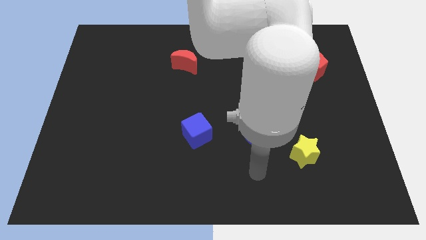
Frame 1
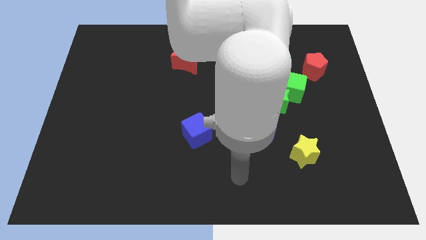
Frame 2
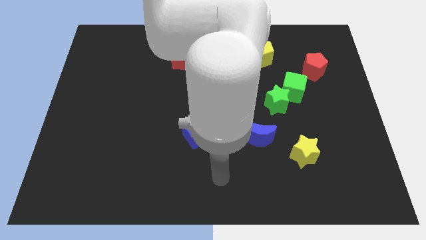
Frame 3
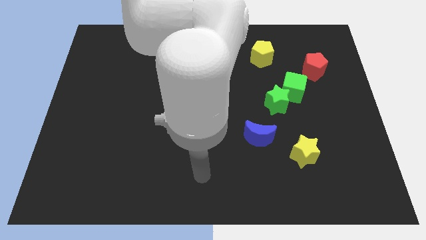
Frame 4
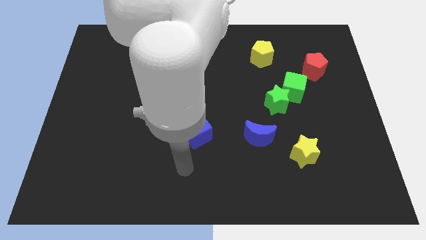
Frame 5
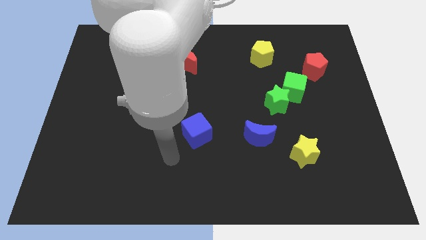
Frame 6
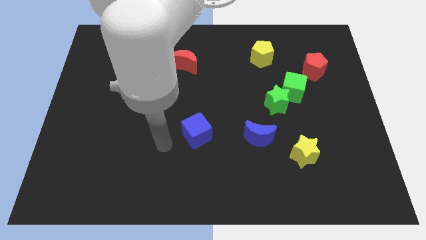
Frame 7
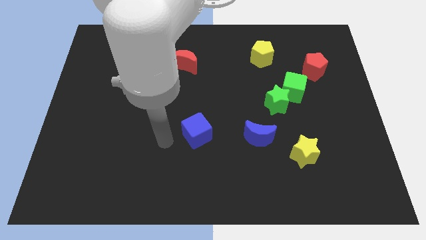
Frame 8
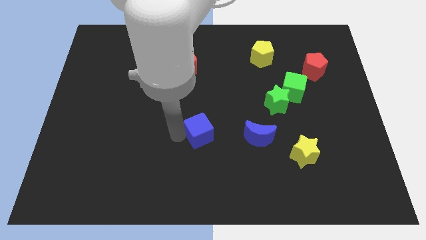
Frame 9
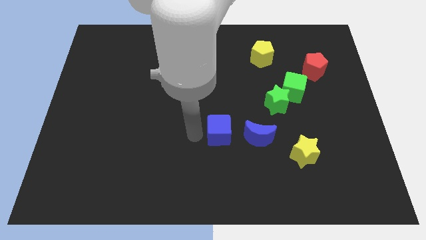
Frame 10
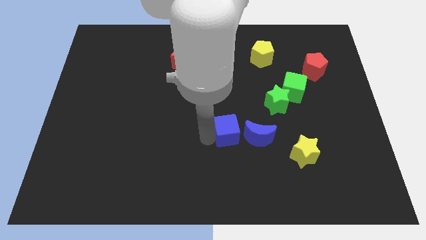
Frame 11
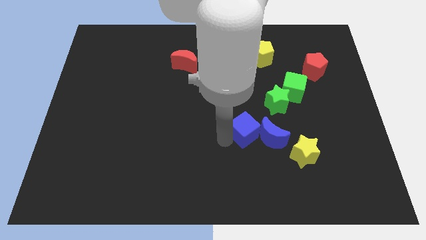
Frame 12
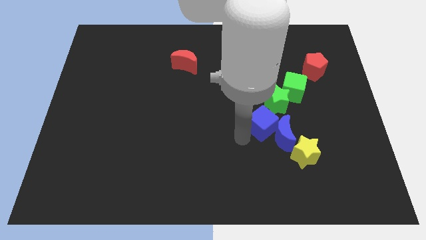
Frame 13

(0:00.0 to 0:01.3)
push the blue cube into the blue moon

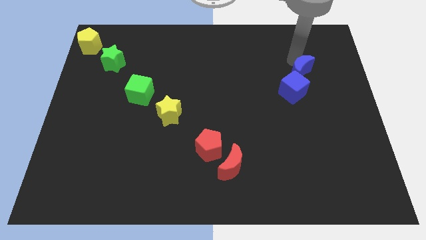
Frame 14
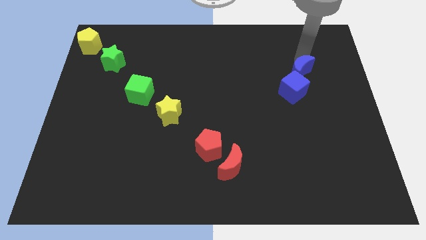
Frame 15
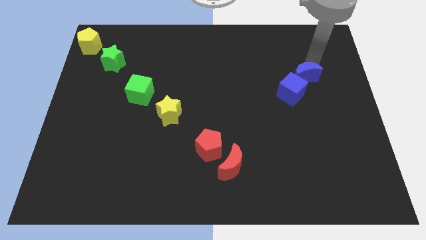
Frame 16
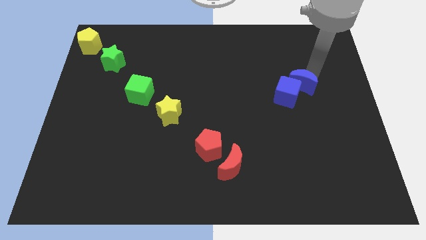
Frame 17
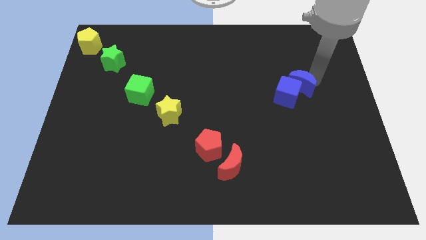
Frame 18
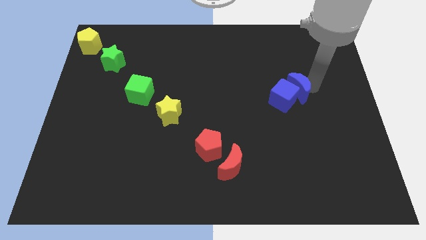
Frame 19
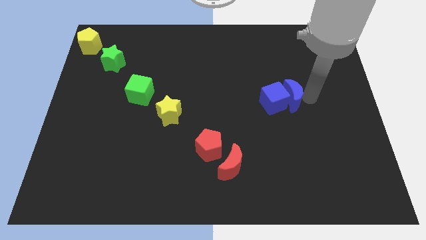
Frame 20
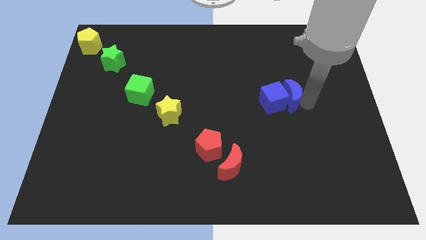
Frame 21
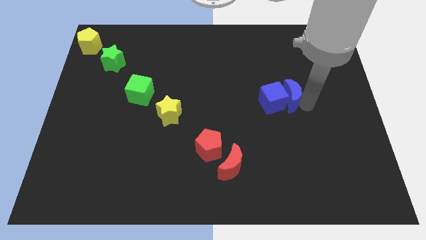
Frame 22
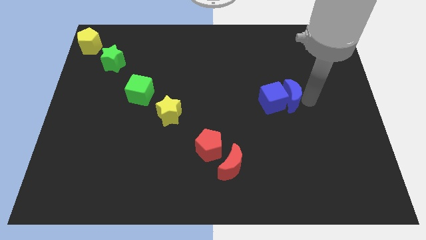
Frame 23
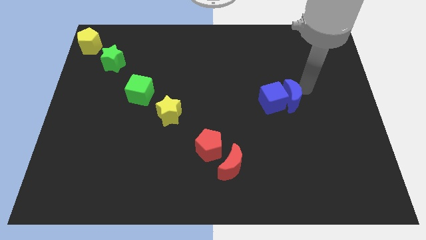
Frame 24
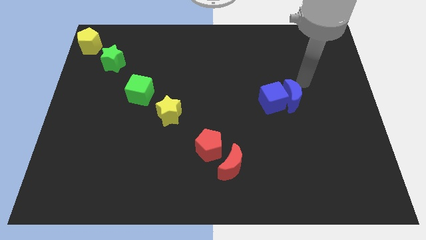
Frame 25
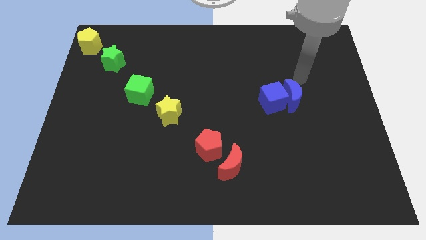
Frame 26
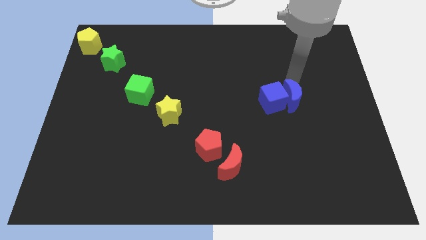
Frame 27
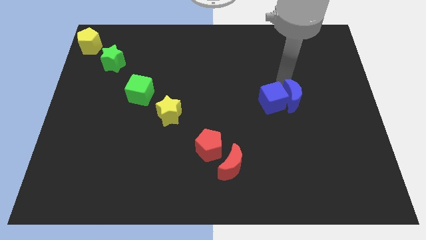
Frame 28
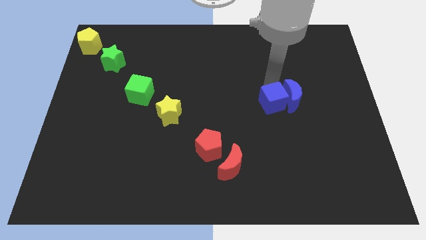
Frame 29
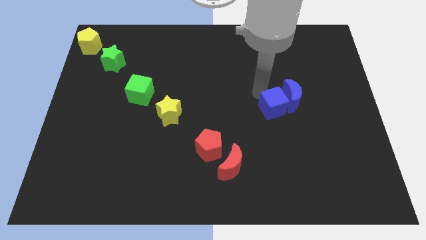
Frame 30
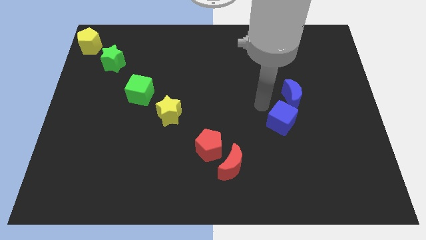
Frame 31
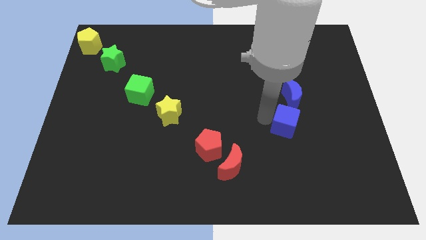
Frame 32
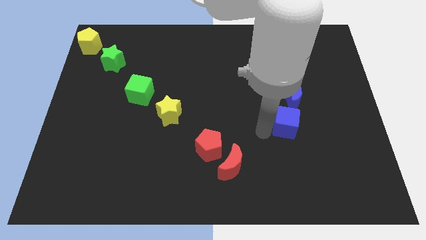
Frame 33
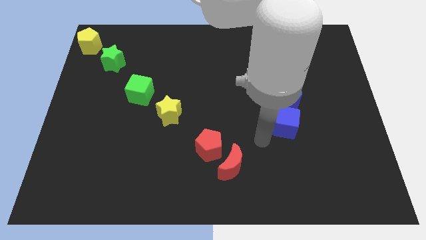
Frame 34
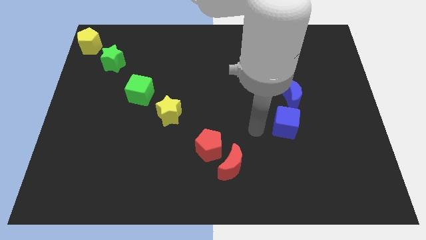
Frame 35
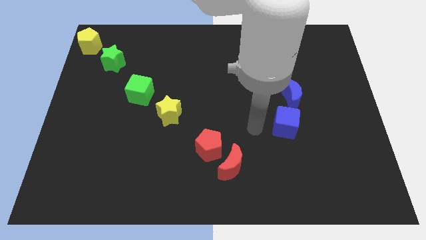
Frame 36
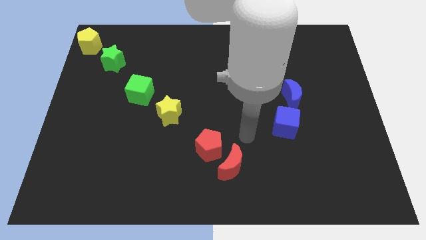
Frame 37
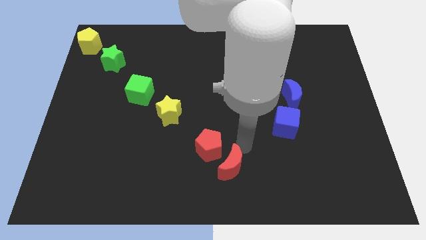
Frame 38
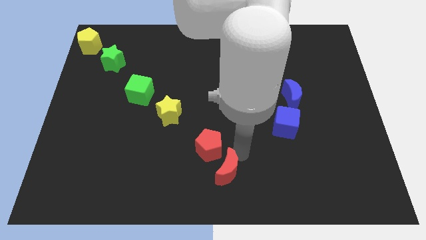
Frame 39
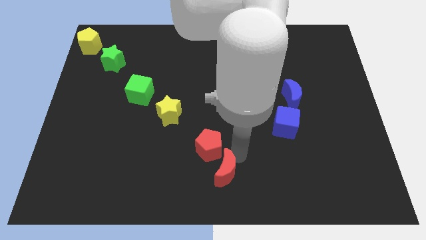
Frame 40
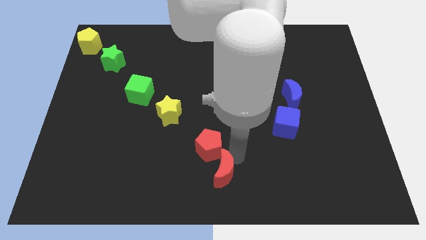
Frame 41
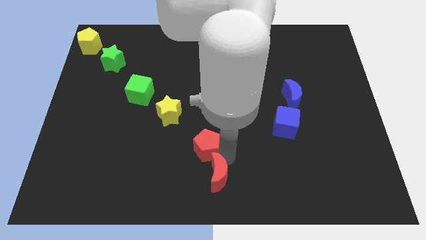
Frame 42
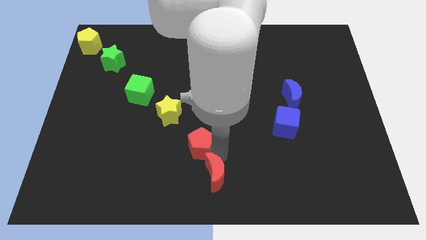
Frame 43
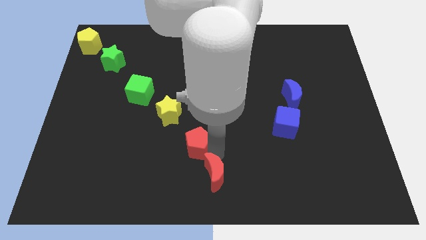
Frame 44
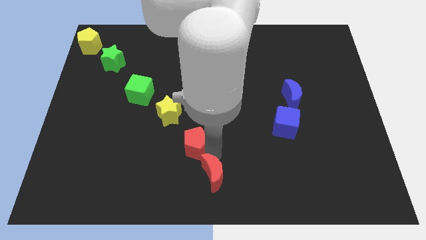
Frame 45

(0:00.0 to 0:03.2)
push the blue blocks slightly downward

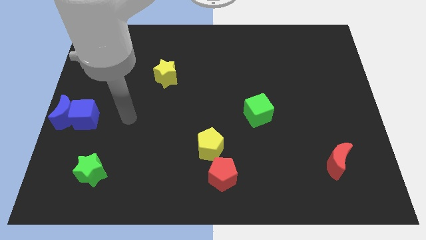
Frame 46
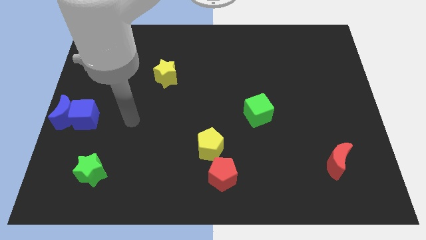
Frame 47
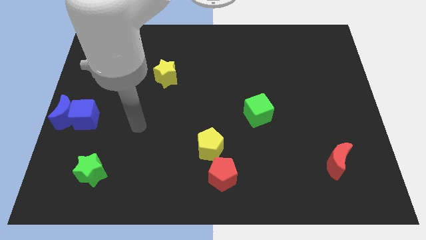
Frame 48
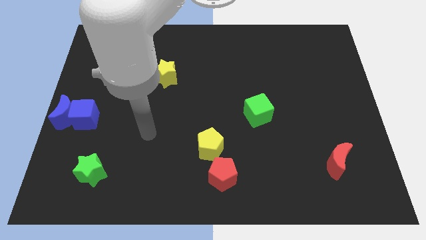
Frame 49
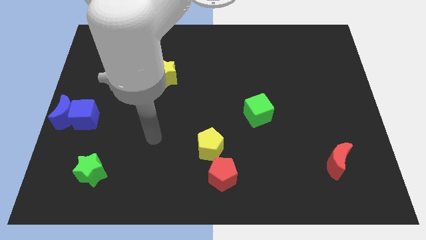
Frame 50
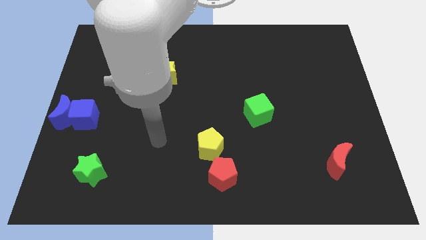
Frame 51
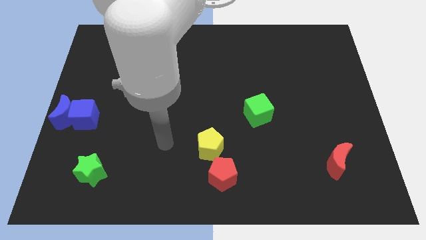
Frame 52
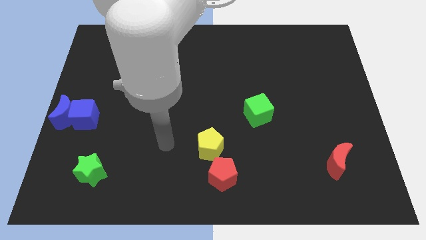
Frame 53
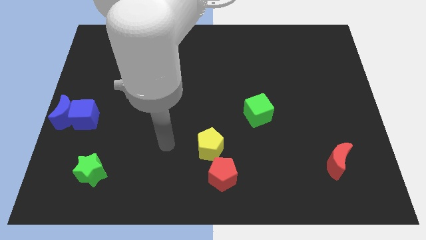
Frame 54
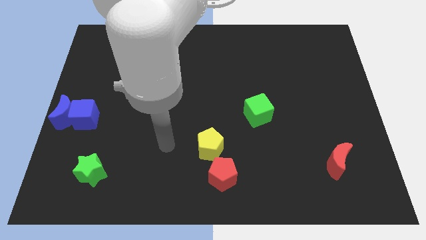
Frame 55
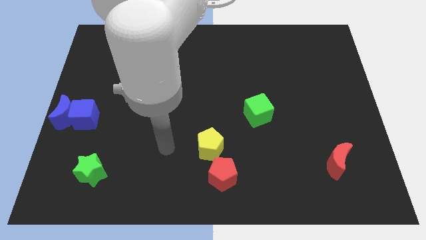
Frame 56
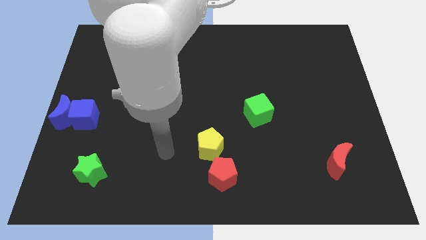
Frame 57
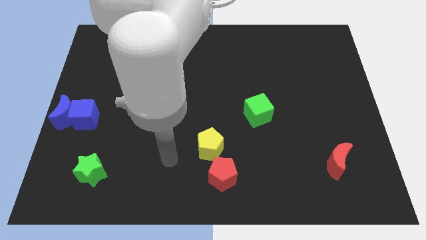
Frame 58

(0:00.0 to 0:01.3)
point your arm at the left of the yellow pentagon

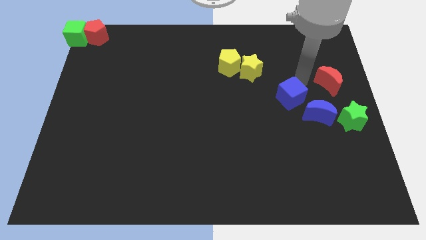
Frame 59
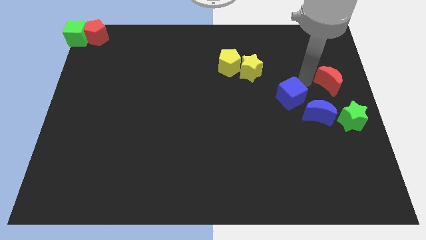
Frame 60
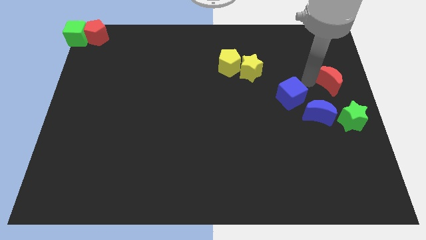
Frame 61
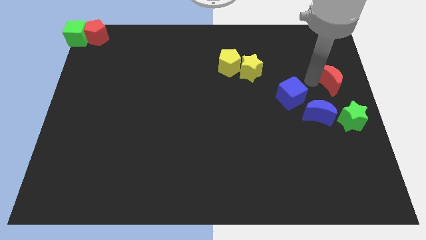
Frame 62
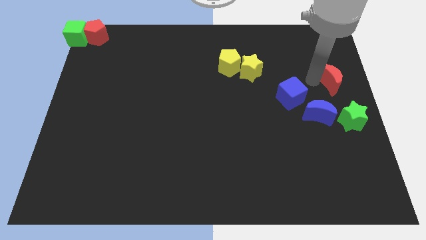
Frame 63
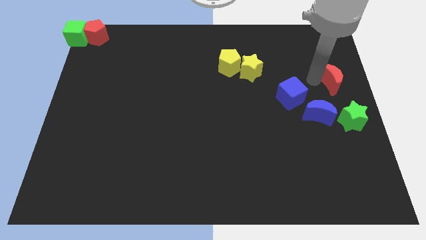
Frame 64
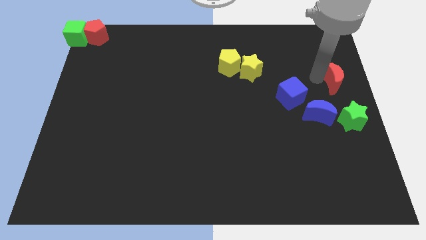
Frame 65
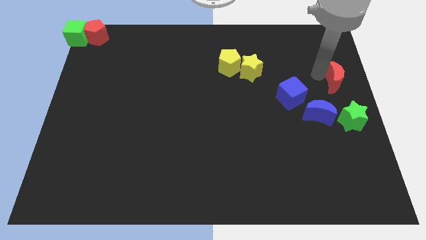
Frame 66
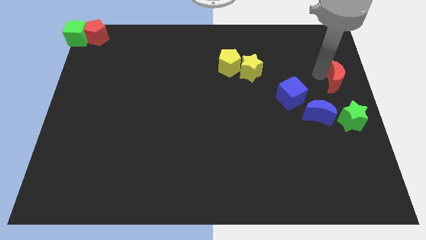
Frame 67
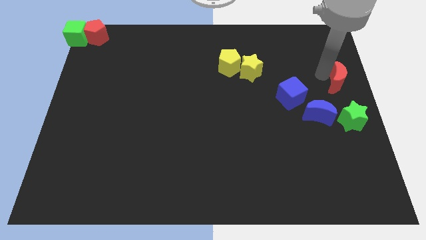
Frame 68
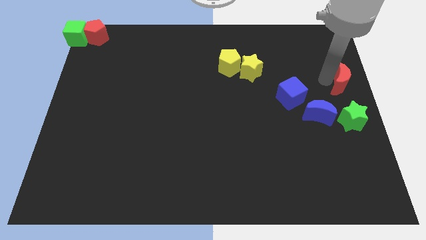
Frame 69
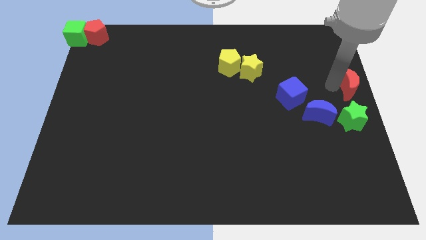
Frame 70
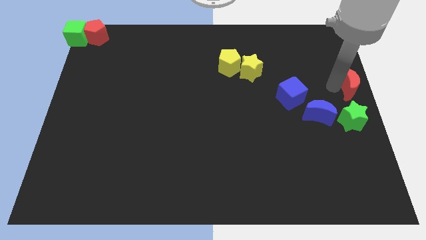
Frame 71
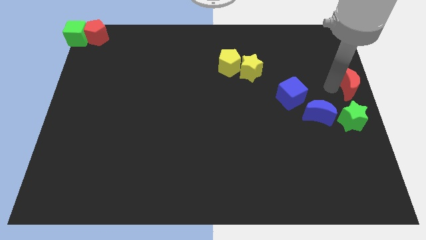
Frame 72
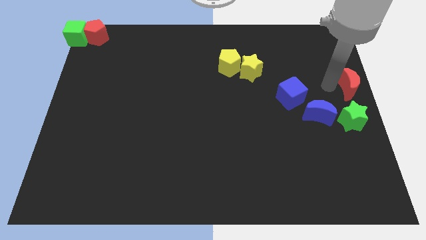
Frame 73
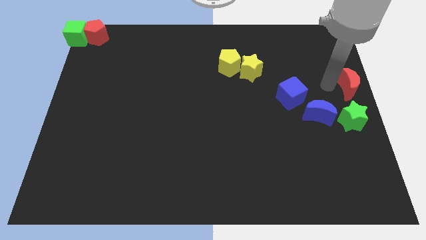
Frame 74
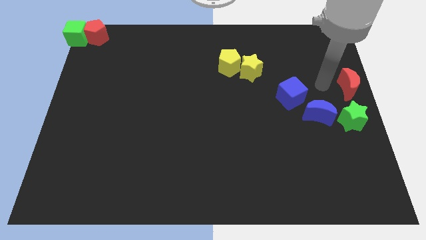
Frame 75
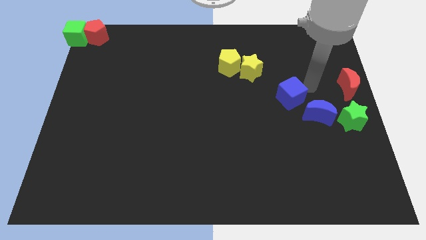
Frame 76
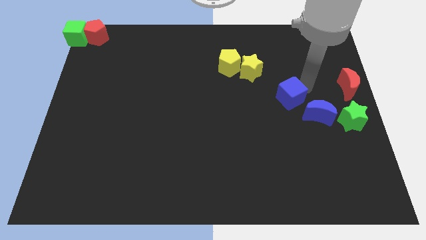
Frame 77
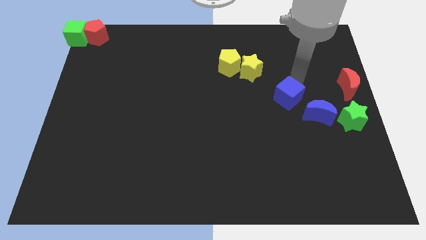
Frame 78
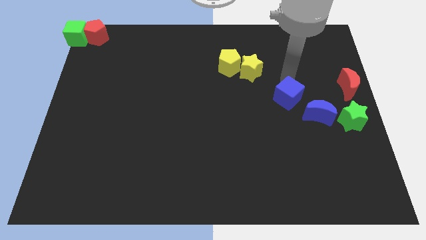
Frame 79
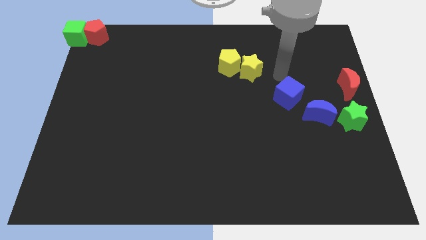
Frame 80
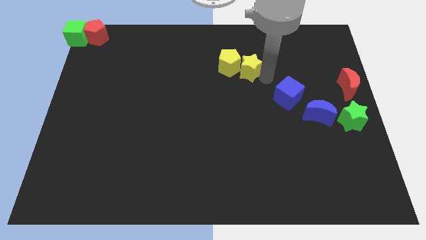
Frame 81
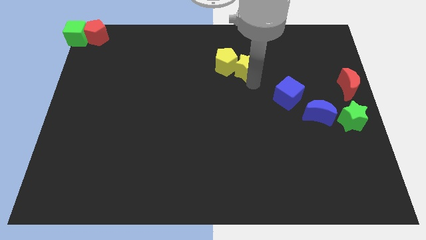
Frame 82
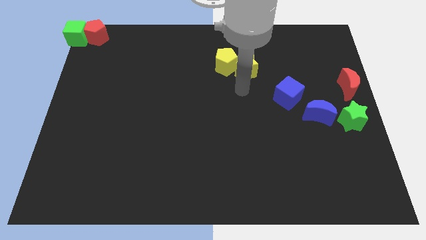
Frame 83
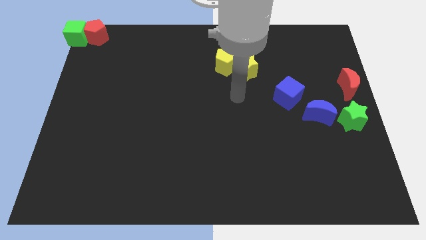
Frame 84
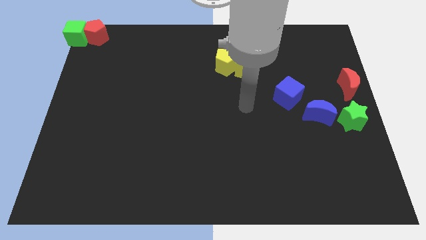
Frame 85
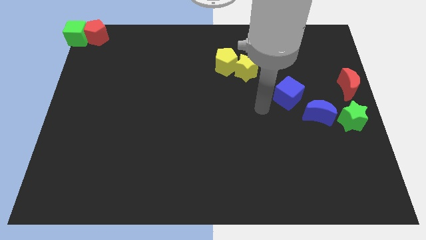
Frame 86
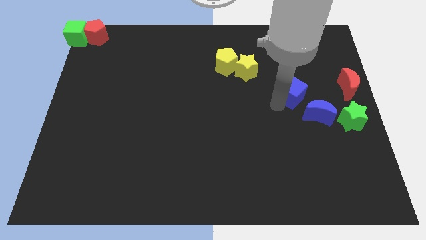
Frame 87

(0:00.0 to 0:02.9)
move the red crescent diagonal to the right of the blue cube

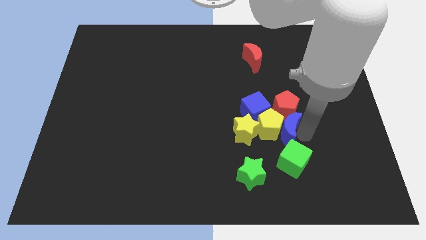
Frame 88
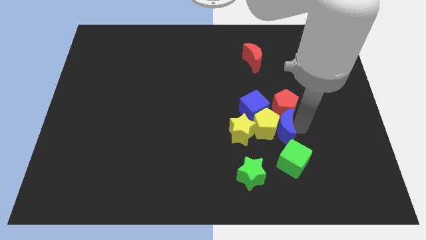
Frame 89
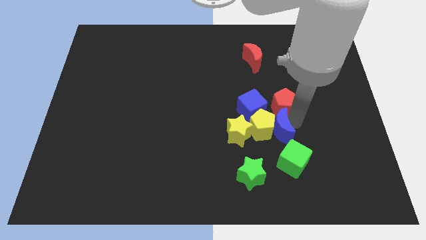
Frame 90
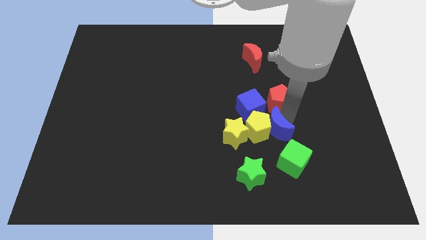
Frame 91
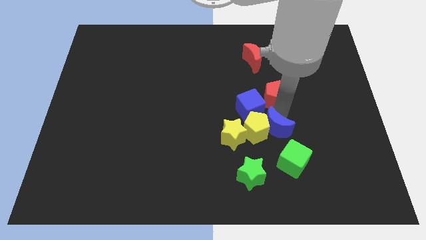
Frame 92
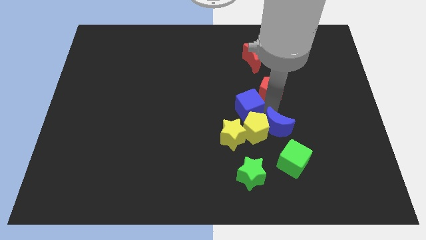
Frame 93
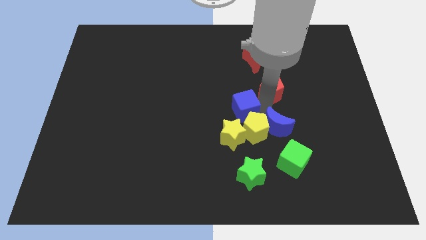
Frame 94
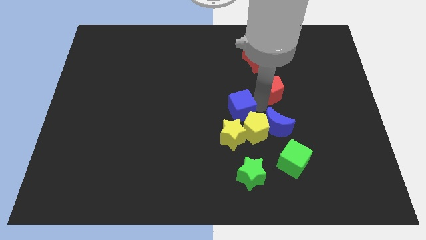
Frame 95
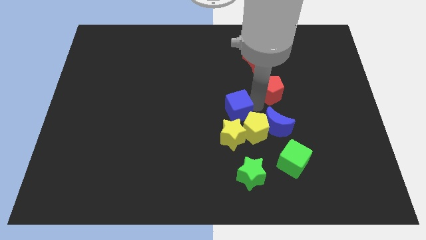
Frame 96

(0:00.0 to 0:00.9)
separate the red pentagon from the group of blocks
